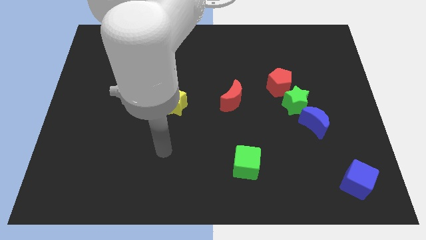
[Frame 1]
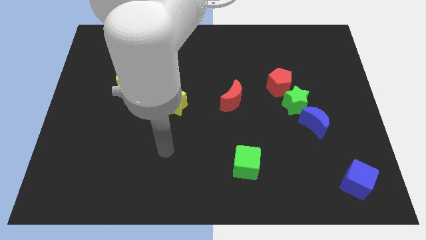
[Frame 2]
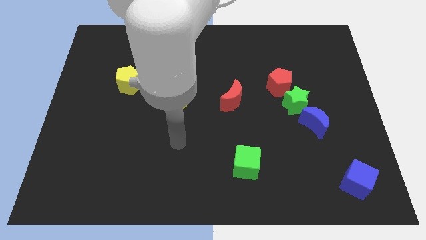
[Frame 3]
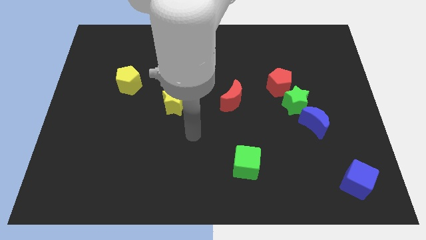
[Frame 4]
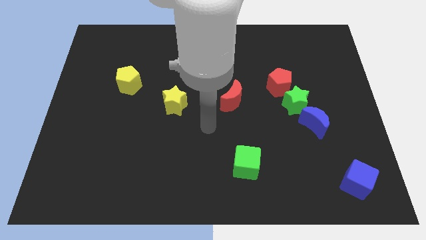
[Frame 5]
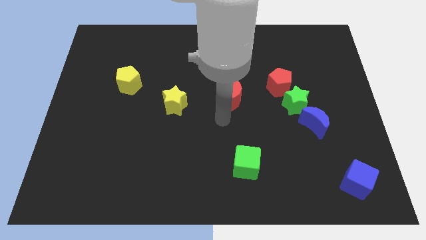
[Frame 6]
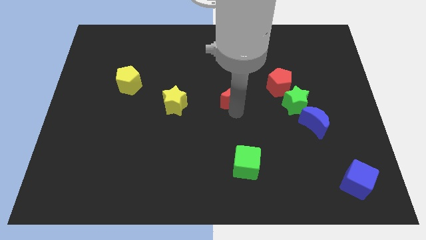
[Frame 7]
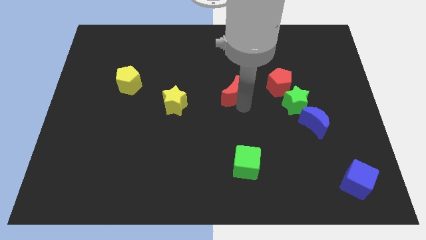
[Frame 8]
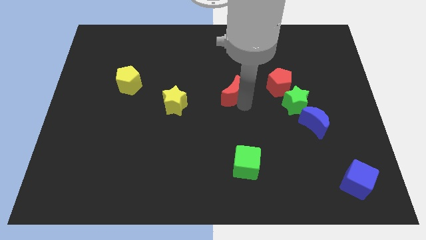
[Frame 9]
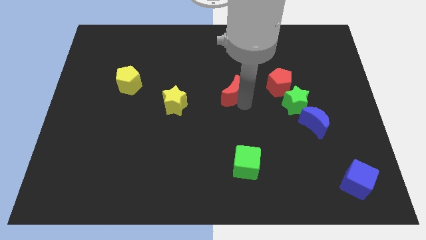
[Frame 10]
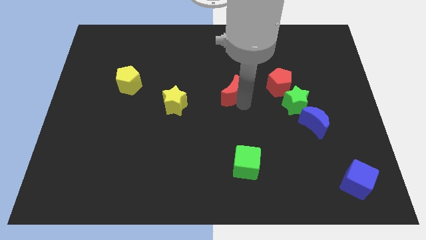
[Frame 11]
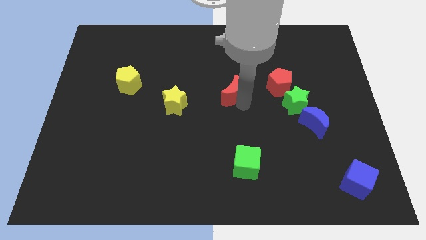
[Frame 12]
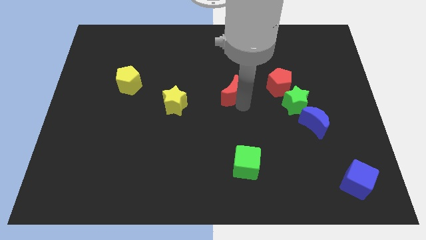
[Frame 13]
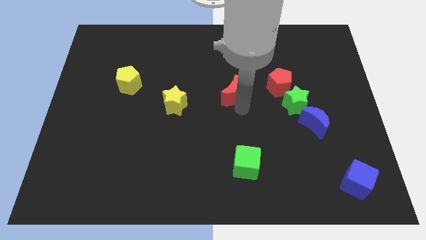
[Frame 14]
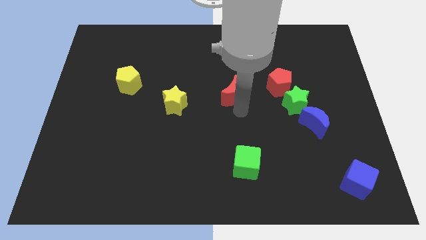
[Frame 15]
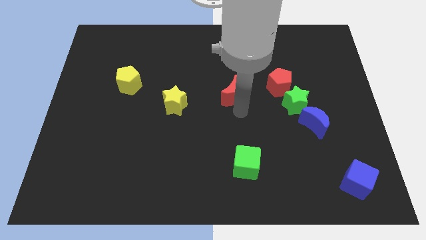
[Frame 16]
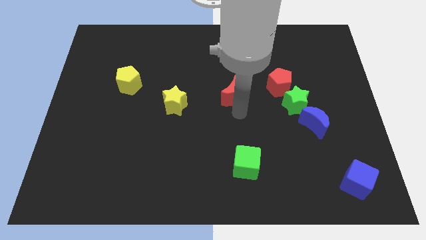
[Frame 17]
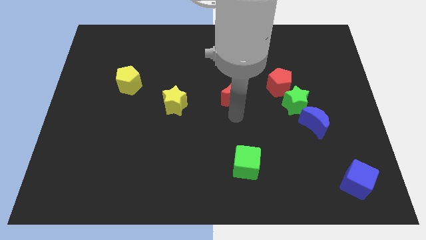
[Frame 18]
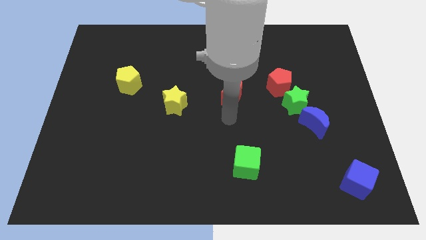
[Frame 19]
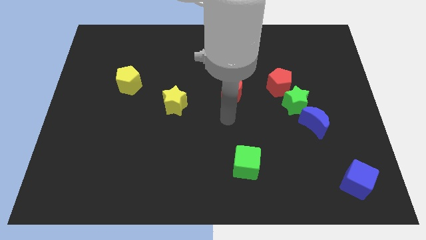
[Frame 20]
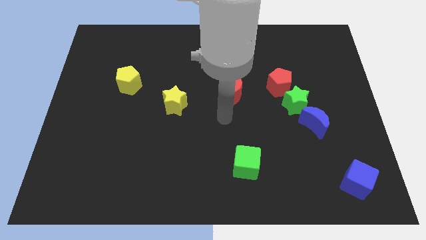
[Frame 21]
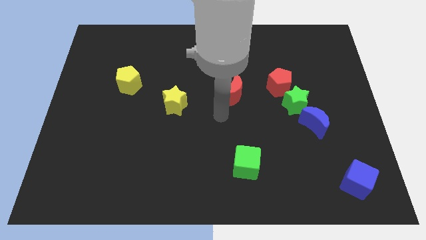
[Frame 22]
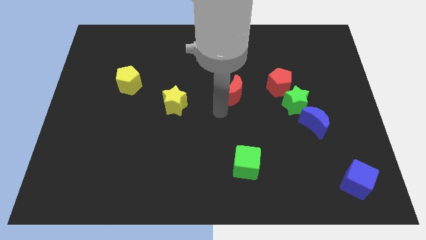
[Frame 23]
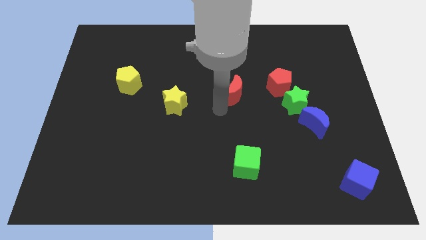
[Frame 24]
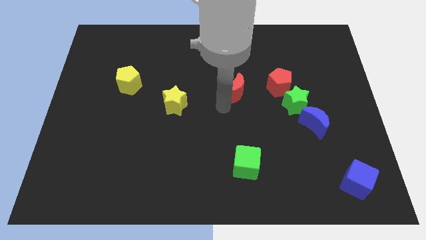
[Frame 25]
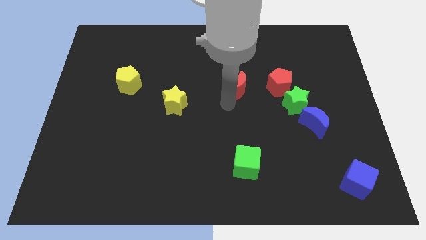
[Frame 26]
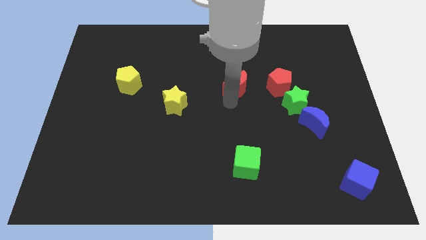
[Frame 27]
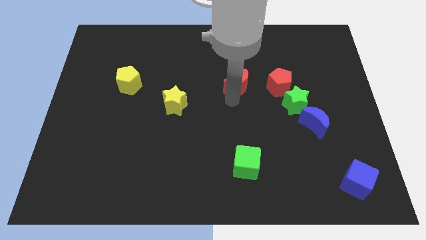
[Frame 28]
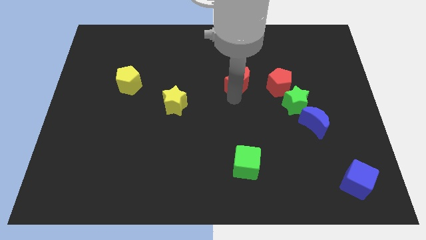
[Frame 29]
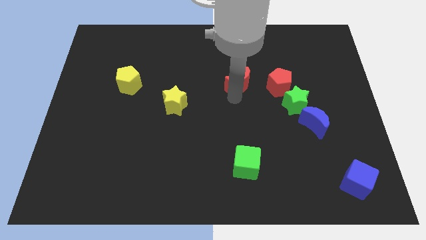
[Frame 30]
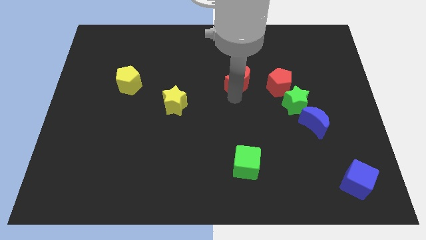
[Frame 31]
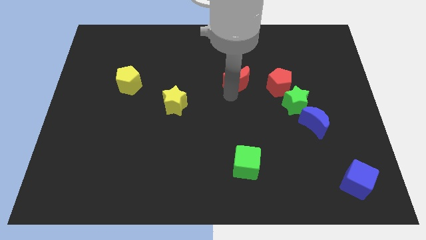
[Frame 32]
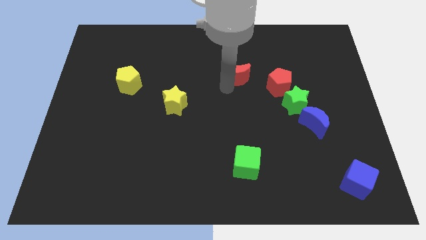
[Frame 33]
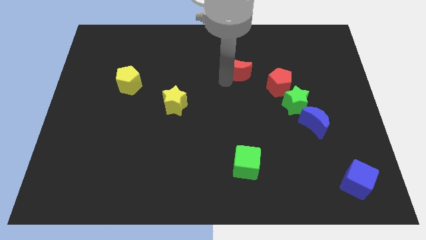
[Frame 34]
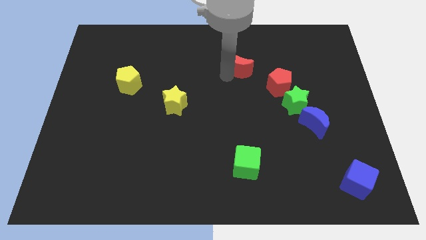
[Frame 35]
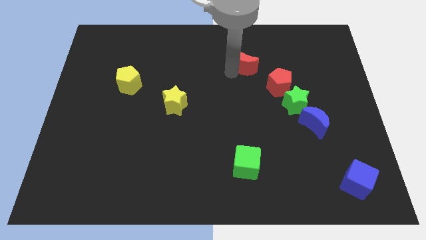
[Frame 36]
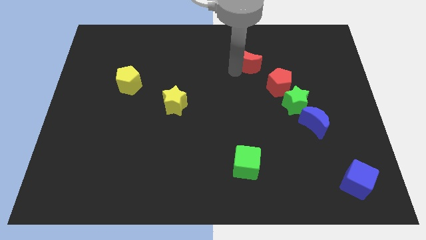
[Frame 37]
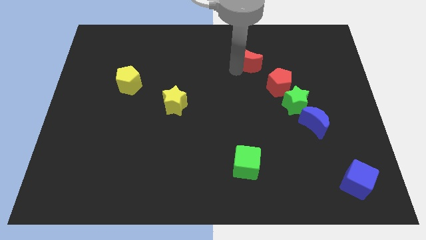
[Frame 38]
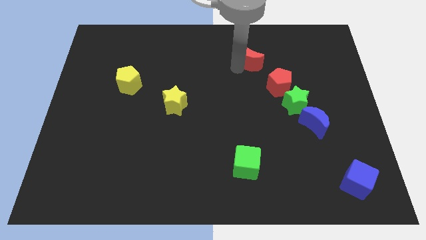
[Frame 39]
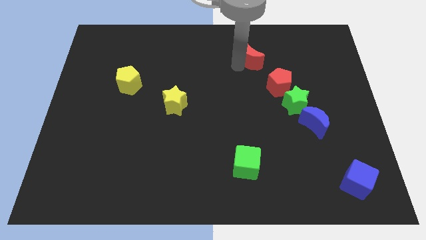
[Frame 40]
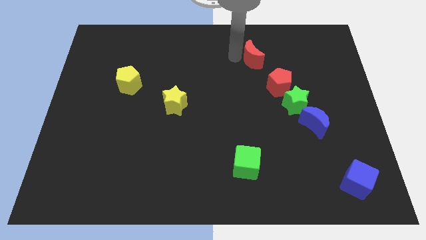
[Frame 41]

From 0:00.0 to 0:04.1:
place the red moon to the top side of the red pentagon

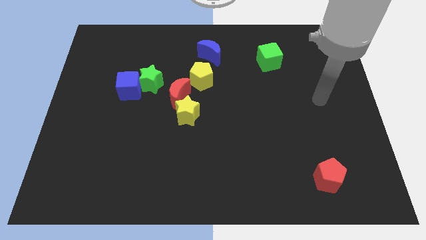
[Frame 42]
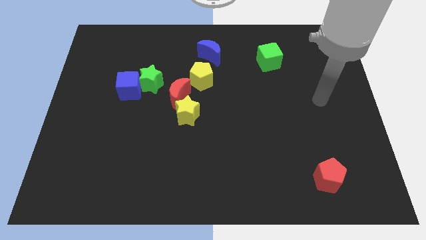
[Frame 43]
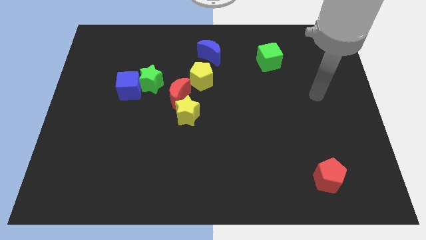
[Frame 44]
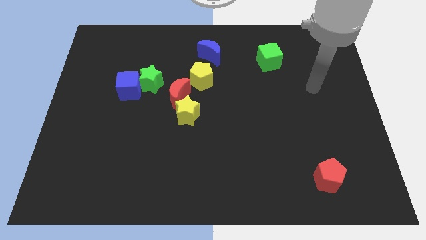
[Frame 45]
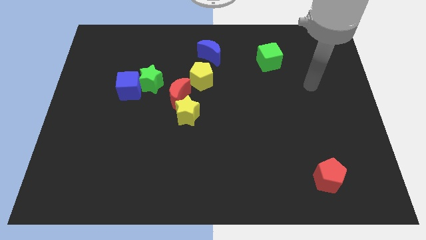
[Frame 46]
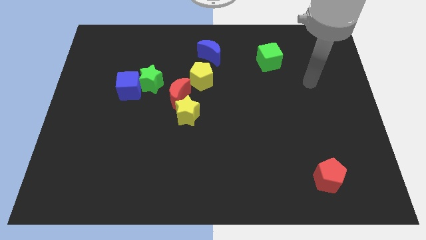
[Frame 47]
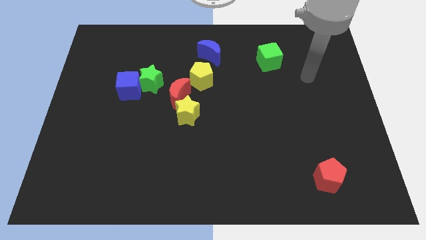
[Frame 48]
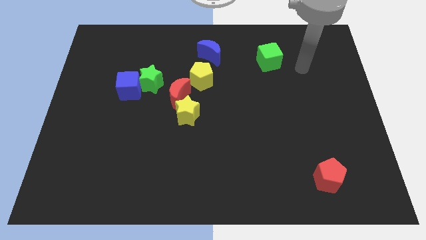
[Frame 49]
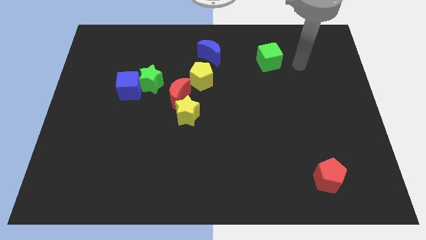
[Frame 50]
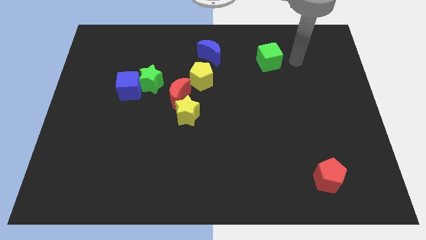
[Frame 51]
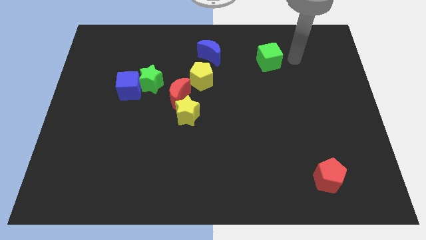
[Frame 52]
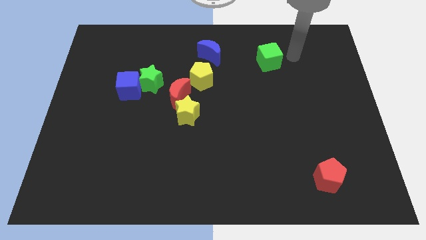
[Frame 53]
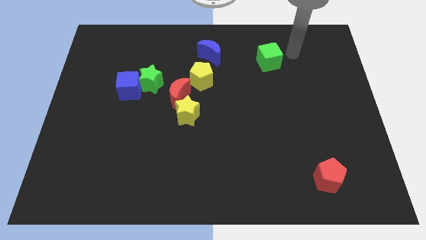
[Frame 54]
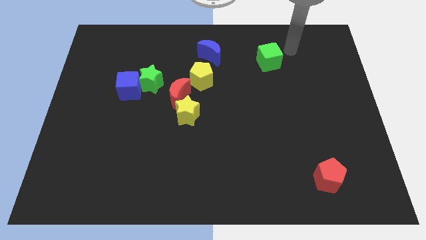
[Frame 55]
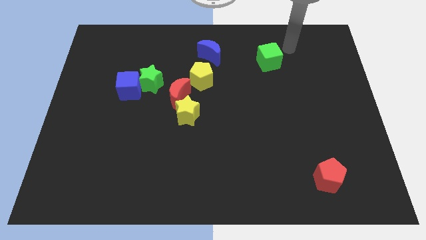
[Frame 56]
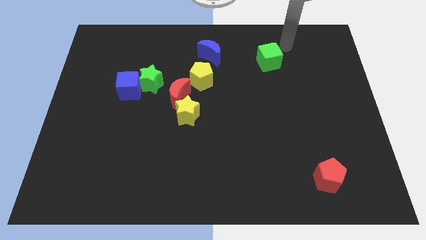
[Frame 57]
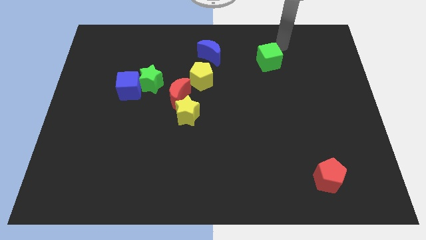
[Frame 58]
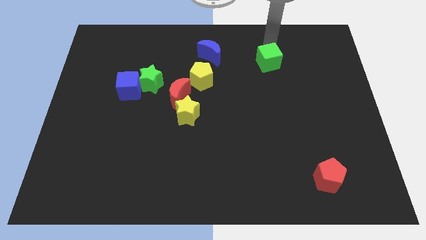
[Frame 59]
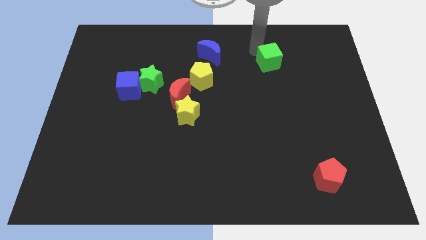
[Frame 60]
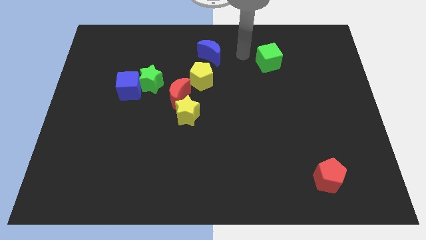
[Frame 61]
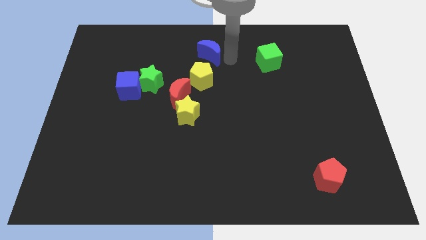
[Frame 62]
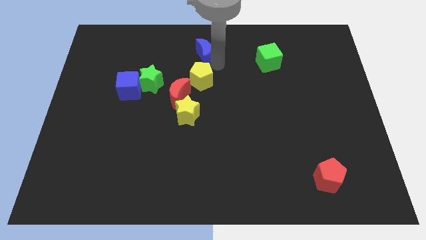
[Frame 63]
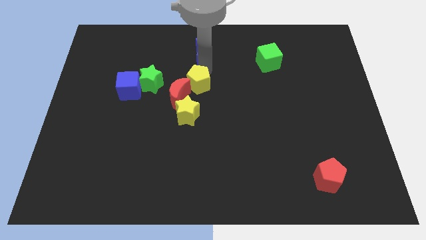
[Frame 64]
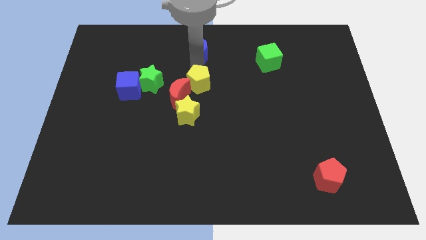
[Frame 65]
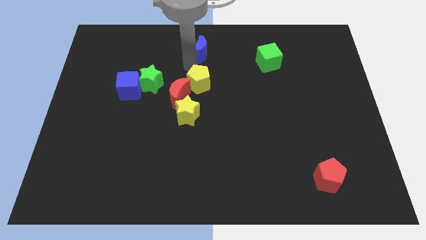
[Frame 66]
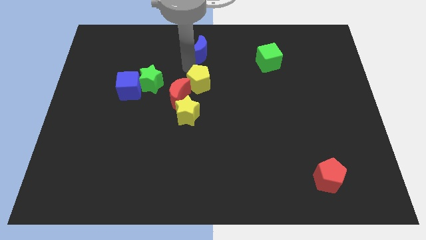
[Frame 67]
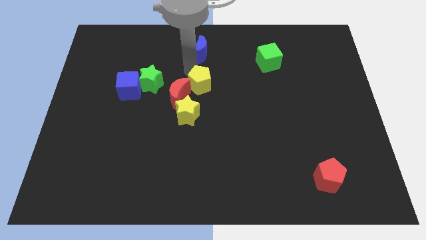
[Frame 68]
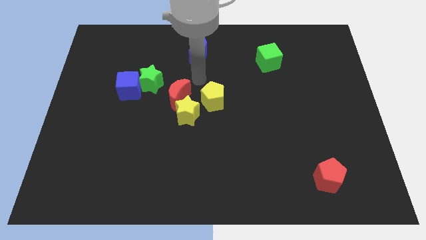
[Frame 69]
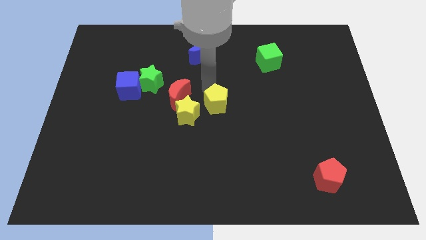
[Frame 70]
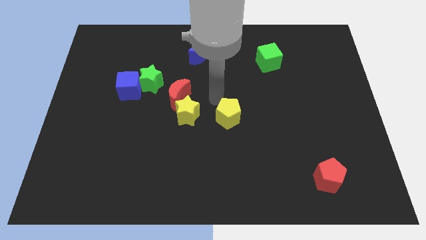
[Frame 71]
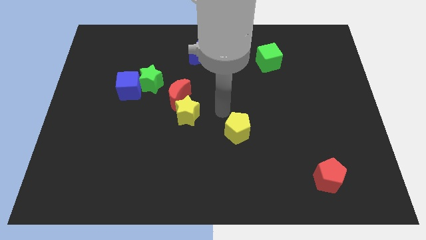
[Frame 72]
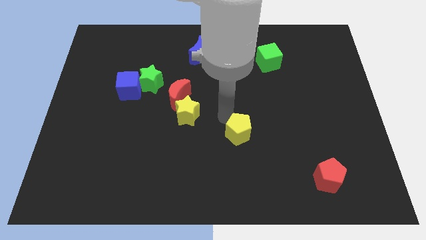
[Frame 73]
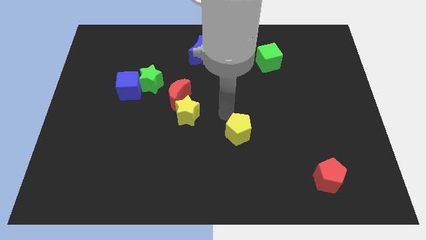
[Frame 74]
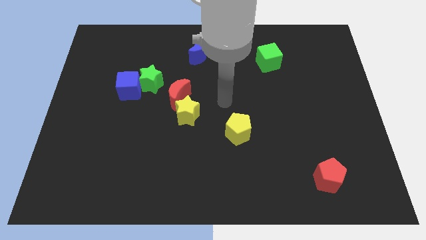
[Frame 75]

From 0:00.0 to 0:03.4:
slightly move the yellow pentagon towards the center of the board

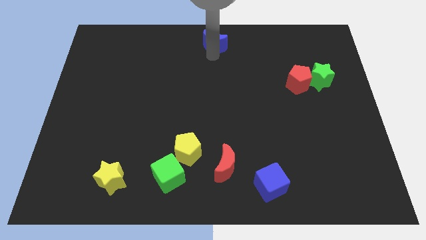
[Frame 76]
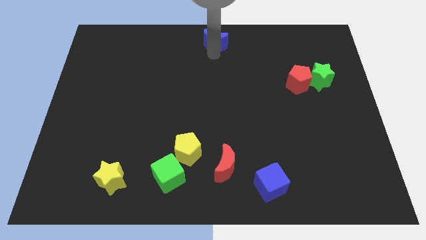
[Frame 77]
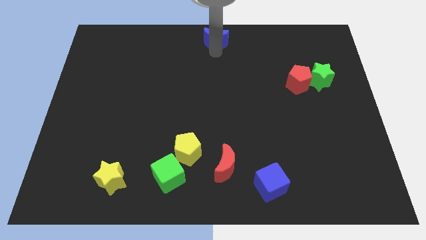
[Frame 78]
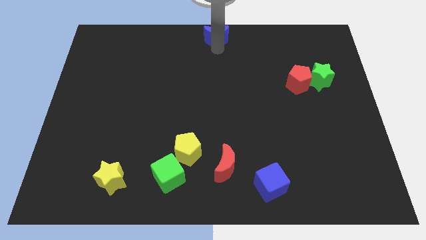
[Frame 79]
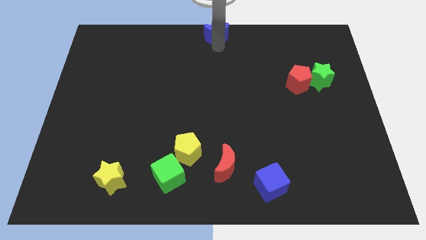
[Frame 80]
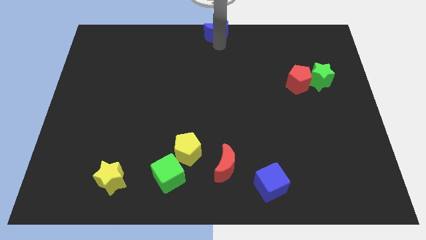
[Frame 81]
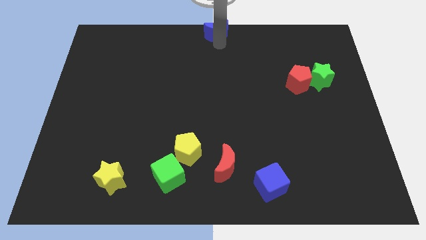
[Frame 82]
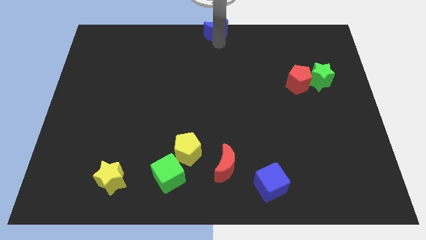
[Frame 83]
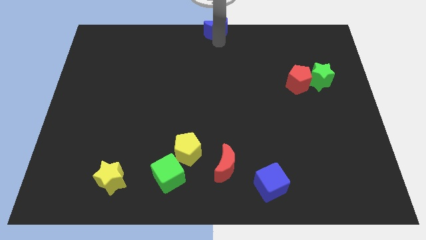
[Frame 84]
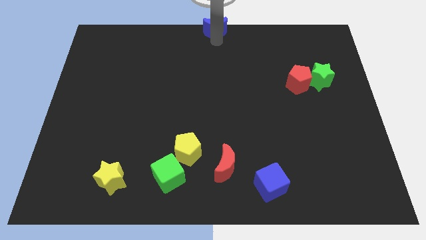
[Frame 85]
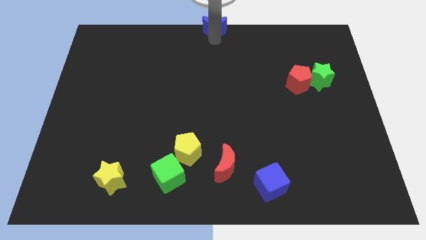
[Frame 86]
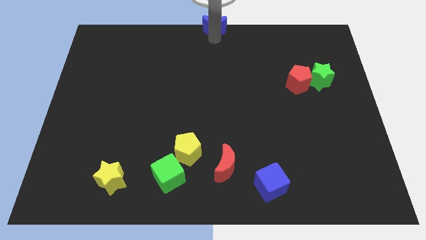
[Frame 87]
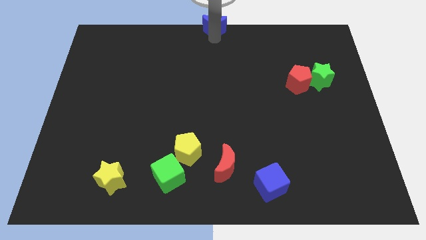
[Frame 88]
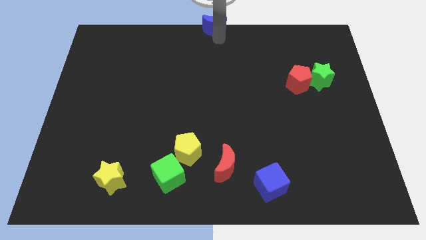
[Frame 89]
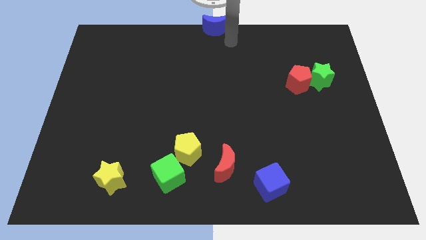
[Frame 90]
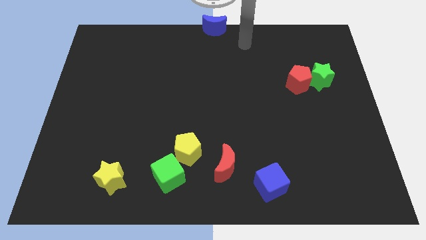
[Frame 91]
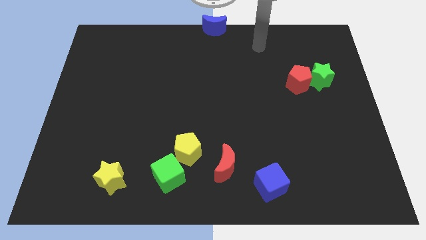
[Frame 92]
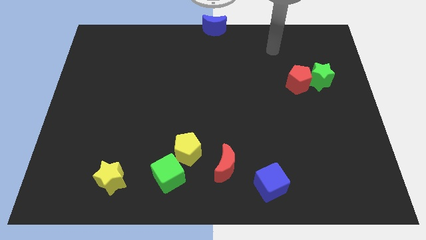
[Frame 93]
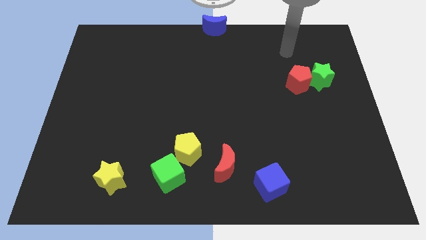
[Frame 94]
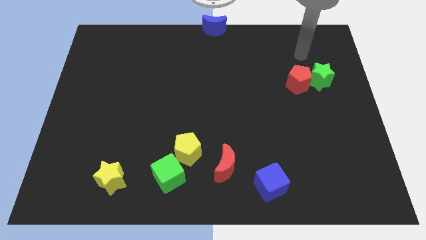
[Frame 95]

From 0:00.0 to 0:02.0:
move the blue moon to the top center
